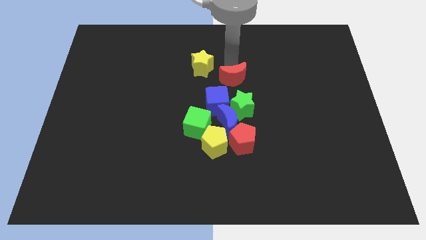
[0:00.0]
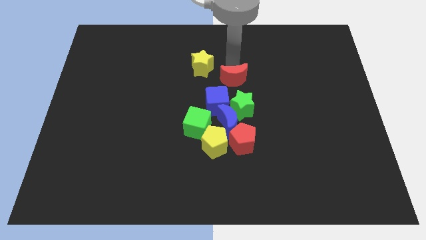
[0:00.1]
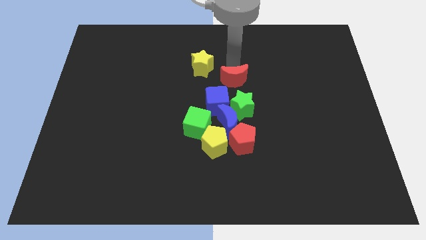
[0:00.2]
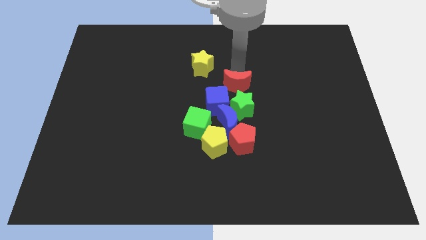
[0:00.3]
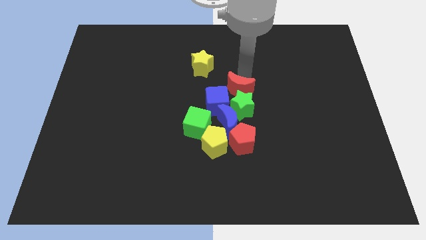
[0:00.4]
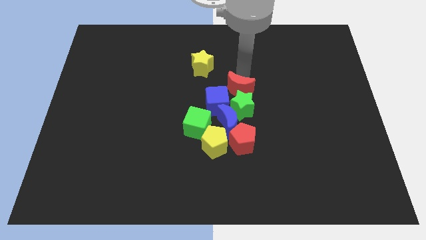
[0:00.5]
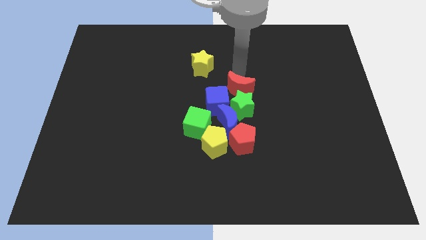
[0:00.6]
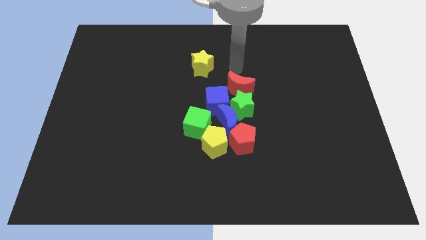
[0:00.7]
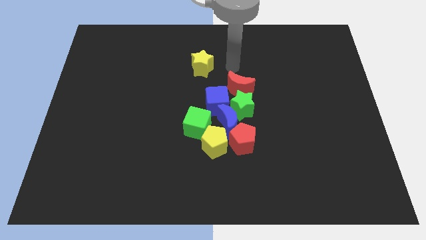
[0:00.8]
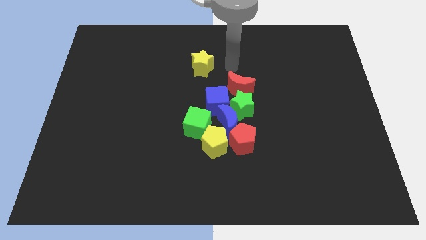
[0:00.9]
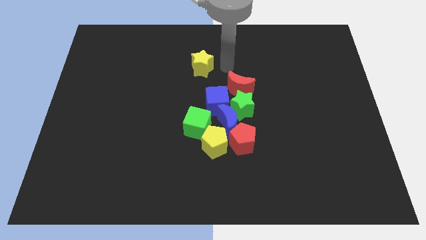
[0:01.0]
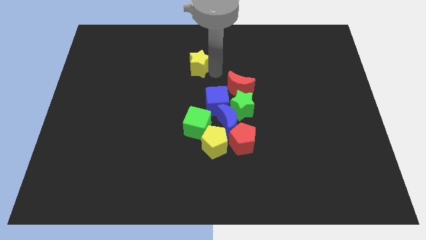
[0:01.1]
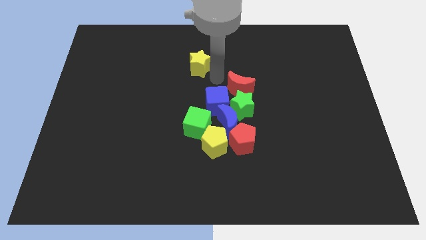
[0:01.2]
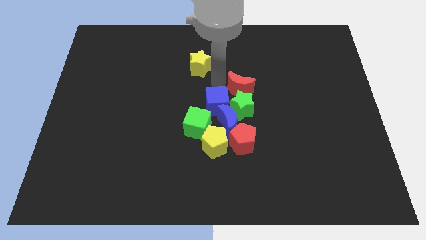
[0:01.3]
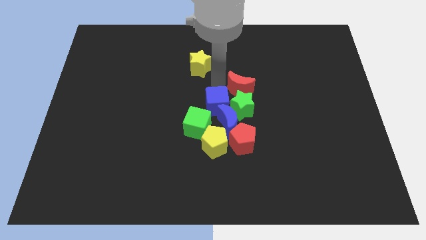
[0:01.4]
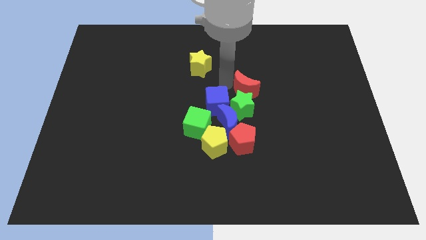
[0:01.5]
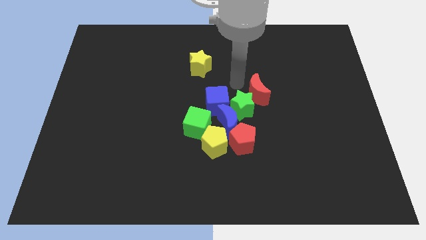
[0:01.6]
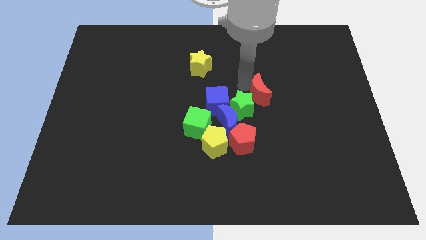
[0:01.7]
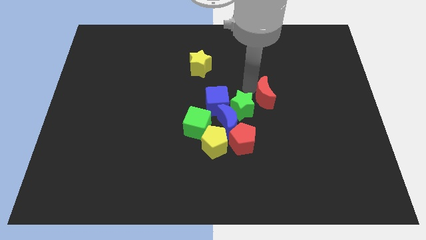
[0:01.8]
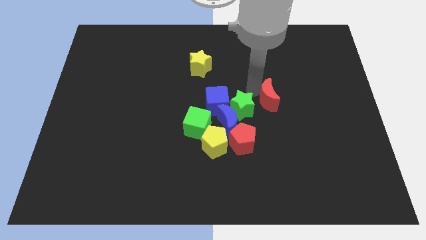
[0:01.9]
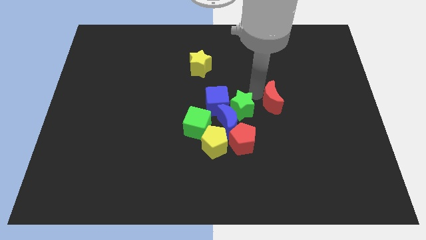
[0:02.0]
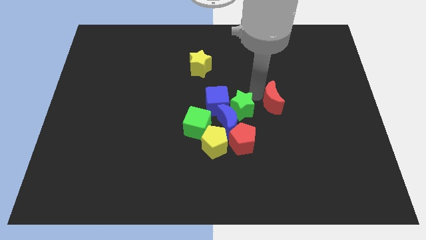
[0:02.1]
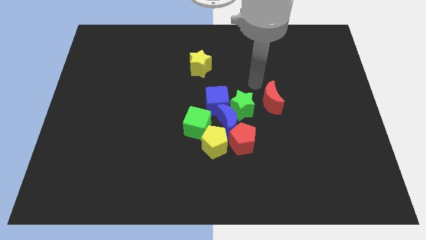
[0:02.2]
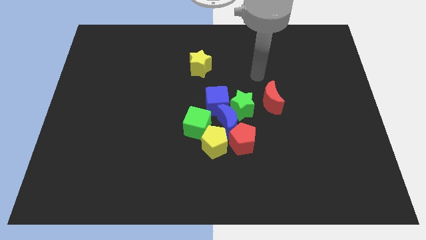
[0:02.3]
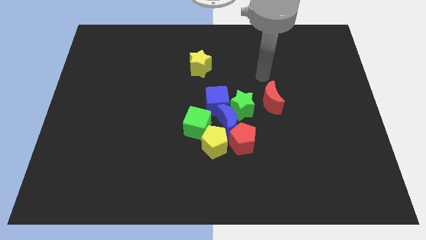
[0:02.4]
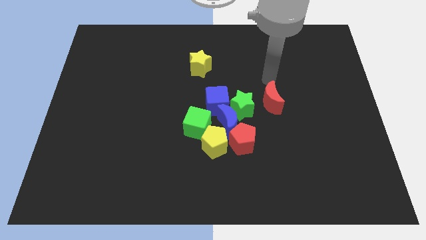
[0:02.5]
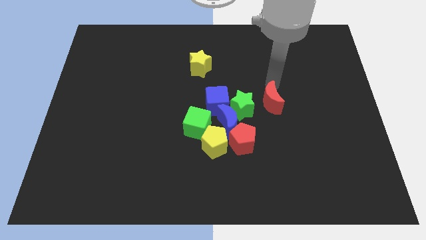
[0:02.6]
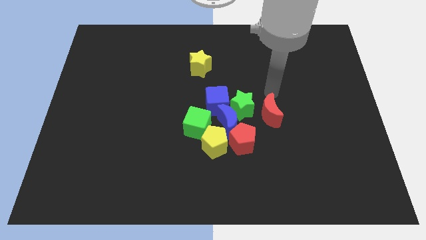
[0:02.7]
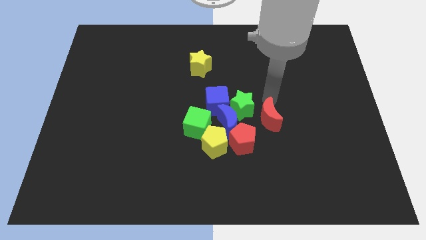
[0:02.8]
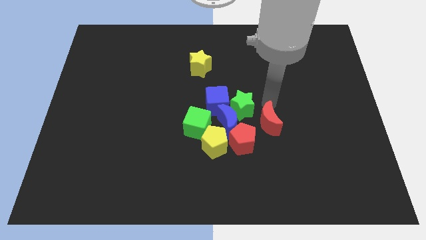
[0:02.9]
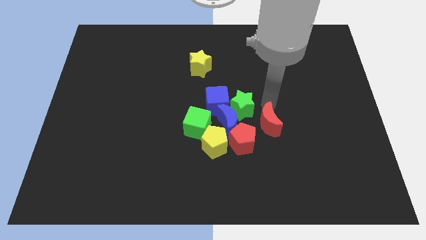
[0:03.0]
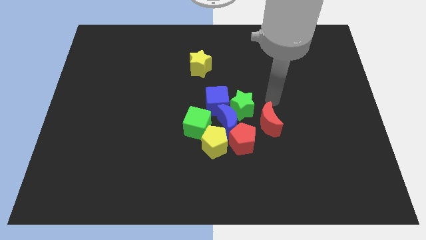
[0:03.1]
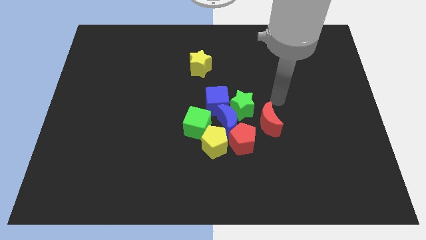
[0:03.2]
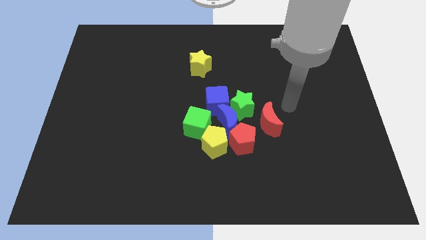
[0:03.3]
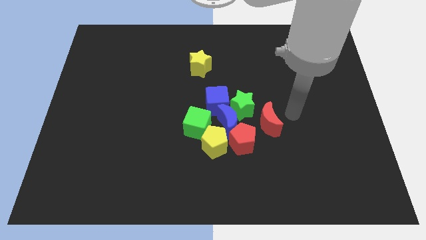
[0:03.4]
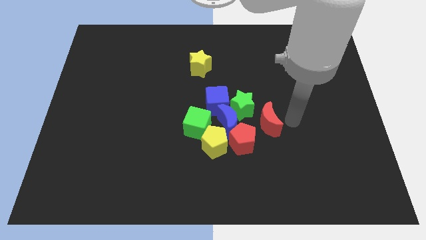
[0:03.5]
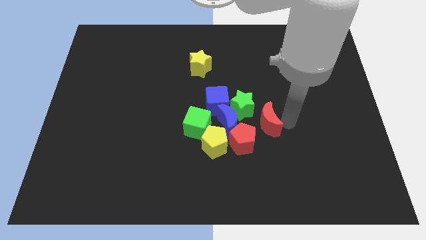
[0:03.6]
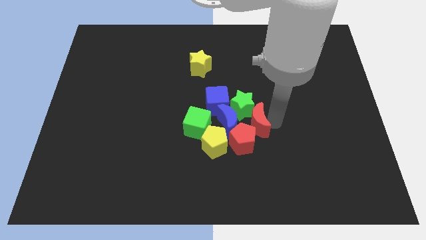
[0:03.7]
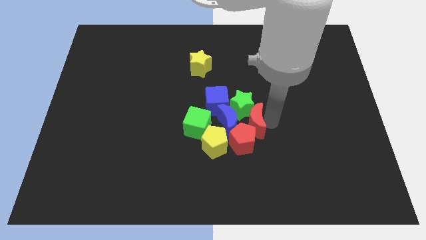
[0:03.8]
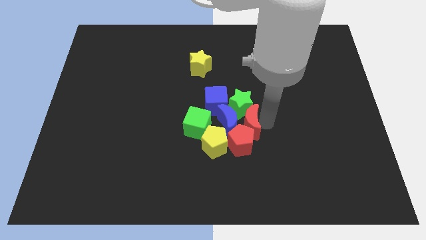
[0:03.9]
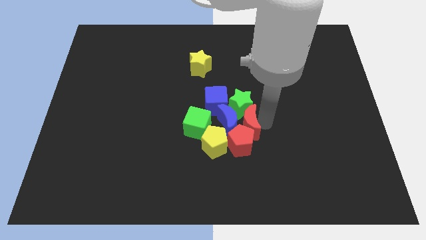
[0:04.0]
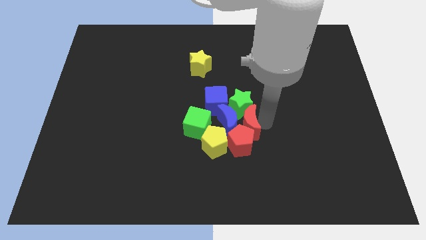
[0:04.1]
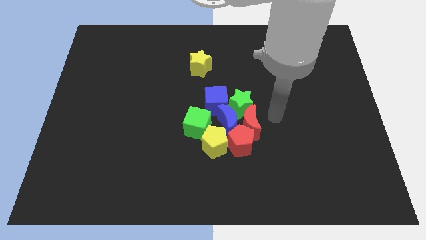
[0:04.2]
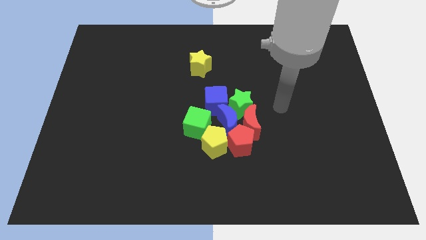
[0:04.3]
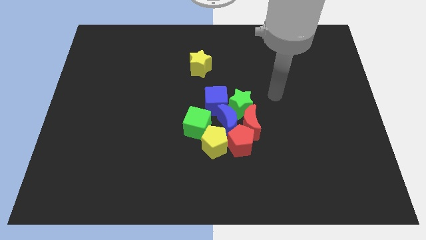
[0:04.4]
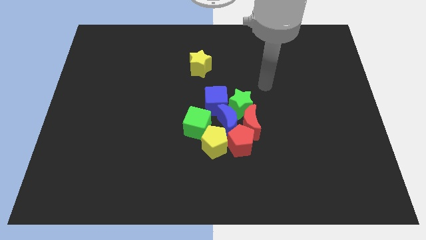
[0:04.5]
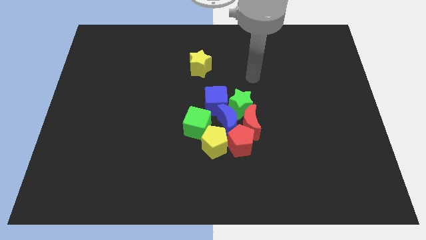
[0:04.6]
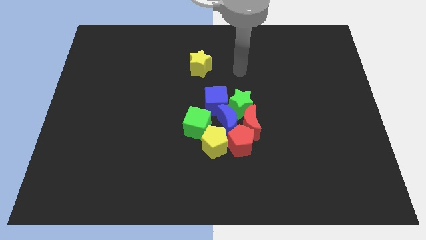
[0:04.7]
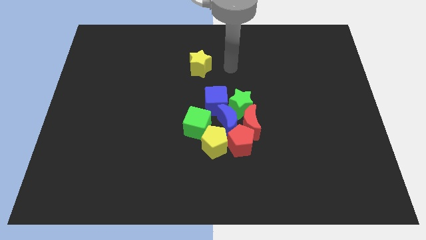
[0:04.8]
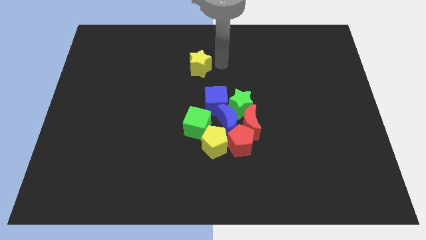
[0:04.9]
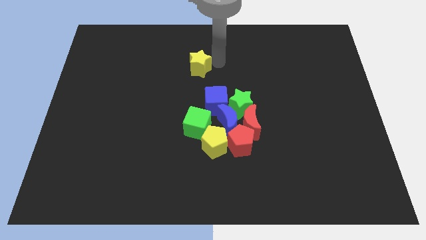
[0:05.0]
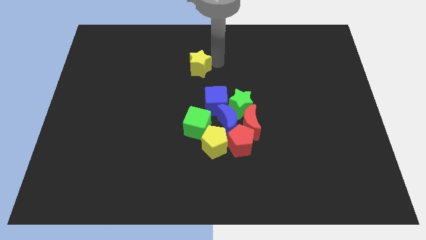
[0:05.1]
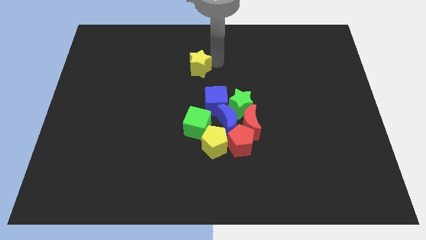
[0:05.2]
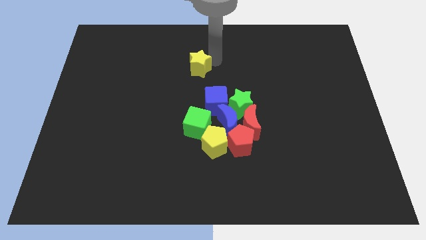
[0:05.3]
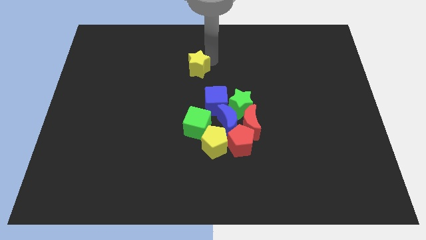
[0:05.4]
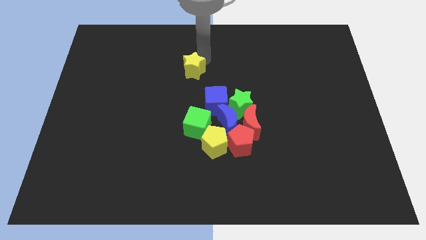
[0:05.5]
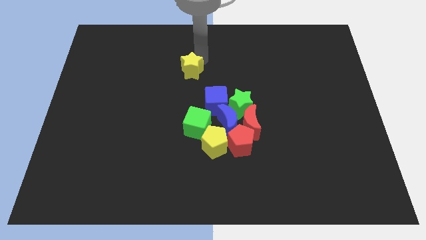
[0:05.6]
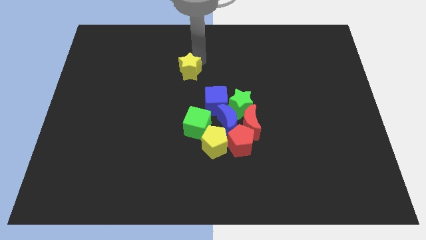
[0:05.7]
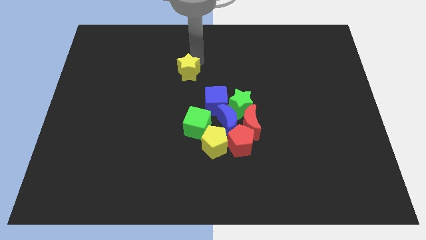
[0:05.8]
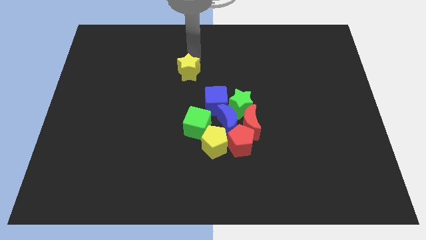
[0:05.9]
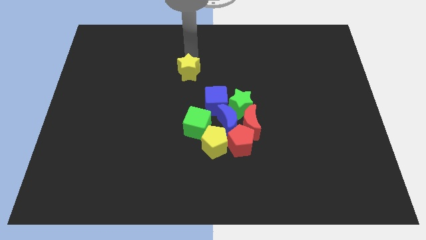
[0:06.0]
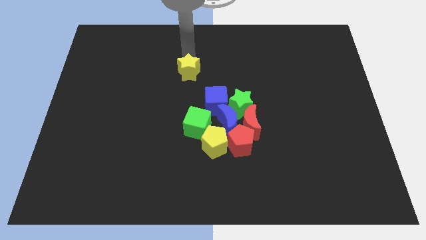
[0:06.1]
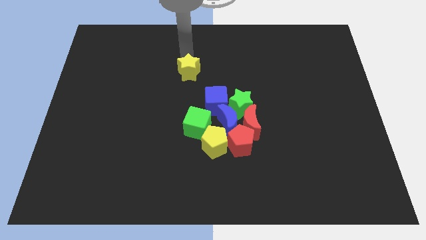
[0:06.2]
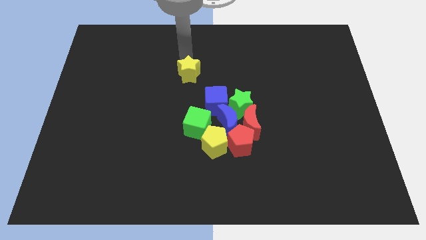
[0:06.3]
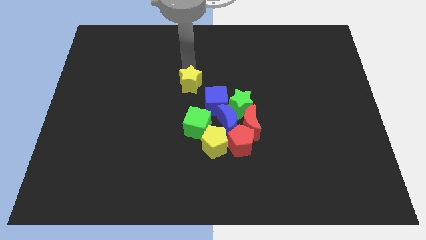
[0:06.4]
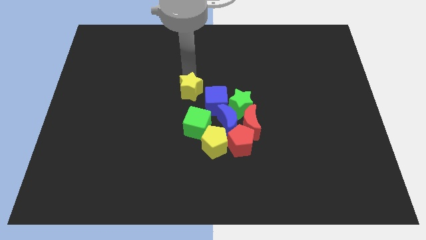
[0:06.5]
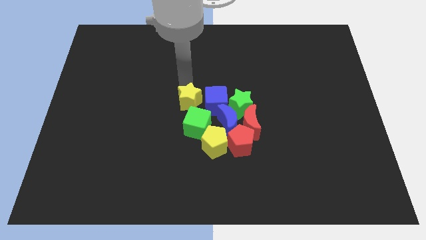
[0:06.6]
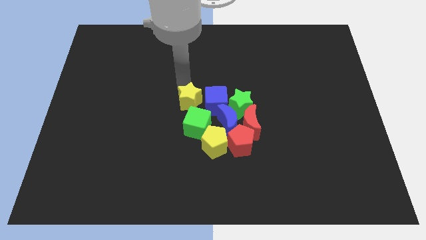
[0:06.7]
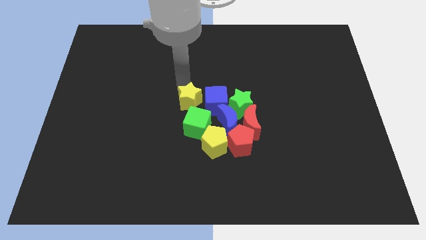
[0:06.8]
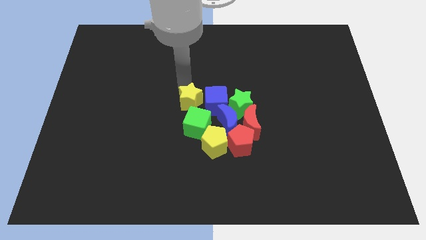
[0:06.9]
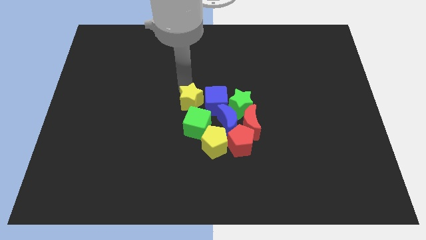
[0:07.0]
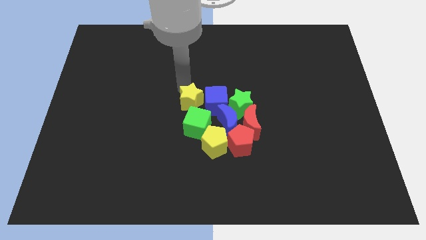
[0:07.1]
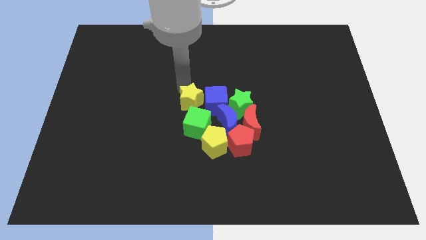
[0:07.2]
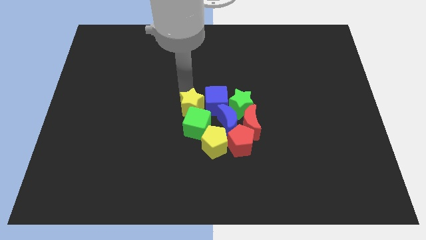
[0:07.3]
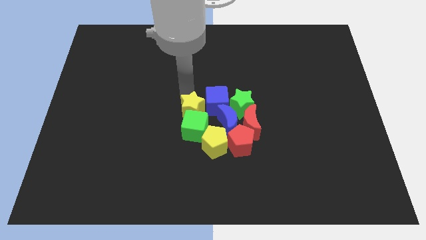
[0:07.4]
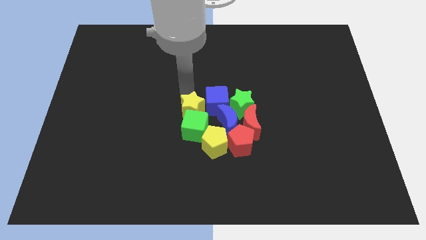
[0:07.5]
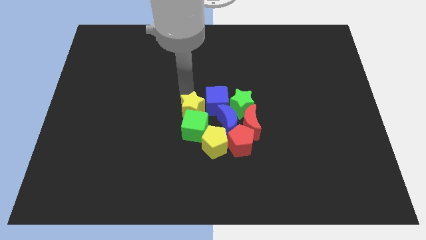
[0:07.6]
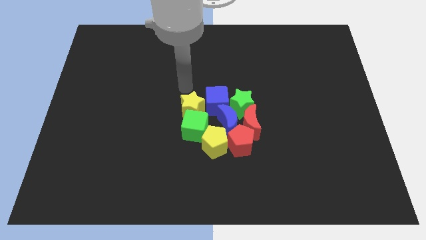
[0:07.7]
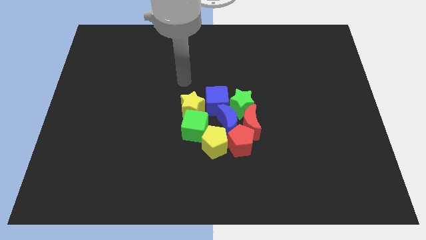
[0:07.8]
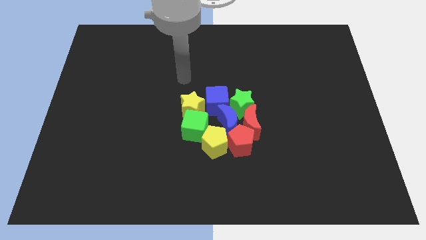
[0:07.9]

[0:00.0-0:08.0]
place all the blocks at the center of the board

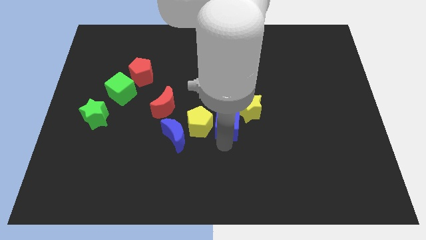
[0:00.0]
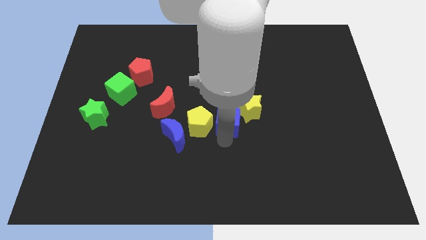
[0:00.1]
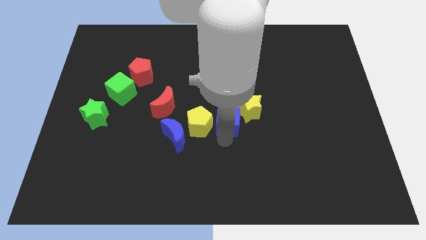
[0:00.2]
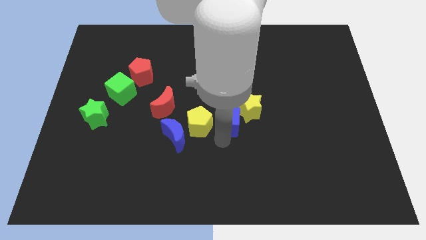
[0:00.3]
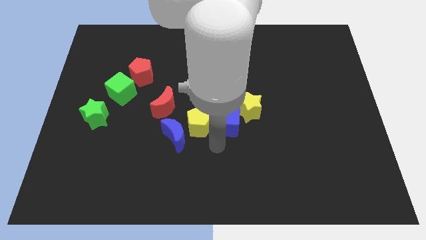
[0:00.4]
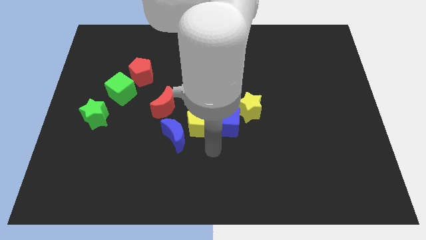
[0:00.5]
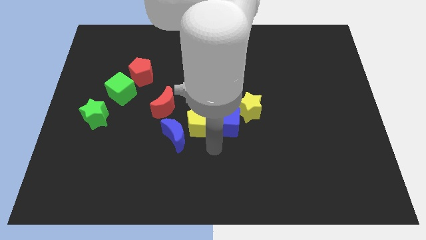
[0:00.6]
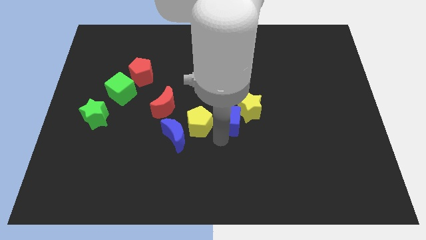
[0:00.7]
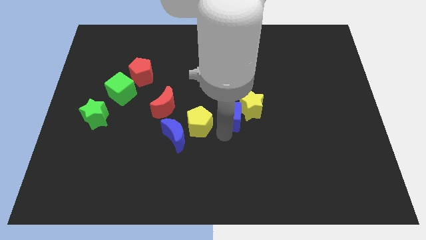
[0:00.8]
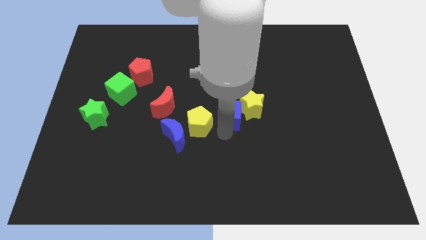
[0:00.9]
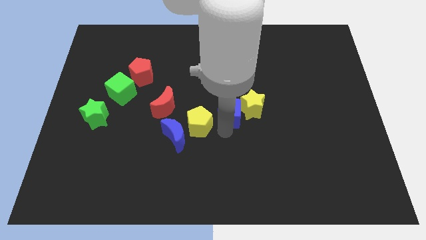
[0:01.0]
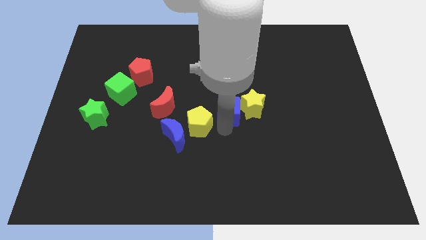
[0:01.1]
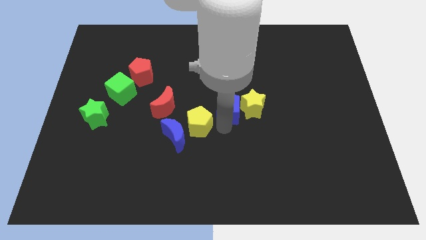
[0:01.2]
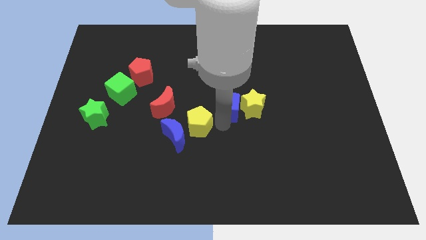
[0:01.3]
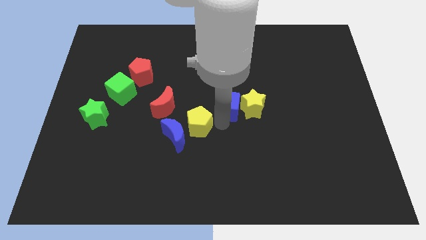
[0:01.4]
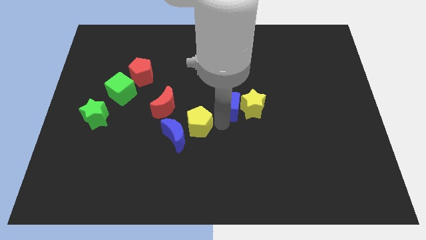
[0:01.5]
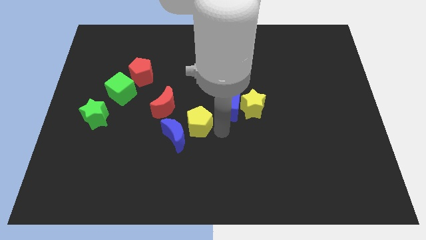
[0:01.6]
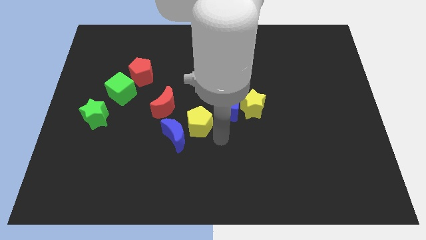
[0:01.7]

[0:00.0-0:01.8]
place the blue cube left to the yellow star
